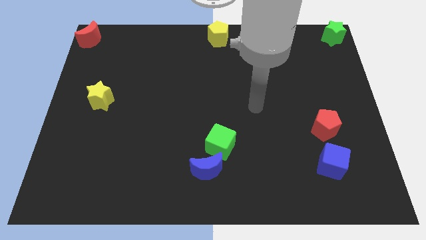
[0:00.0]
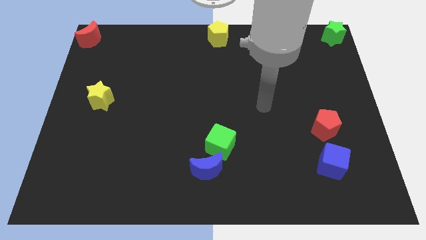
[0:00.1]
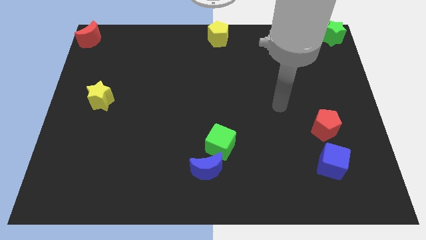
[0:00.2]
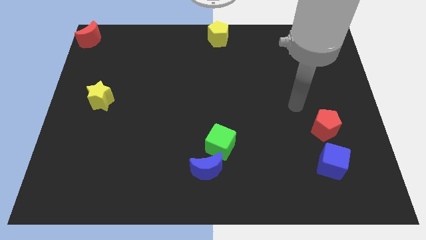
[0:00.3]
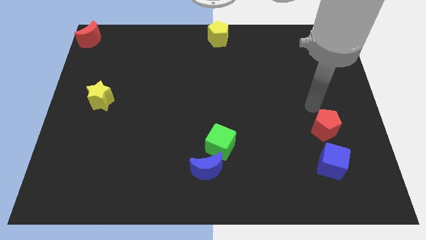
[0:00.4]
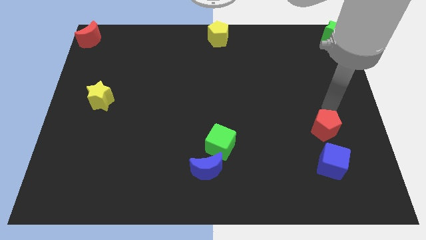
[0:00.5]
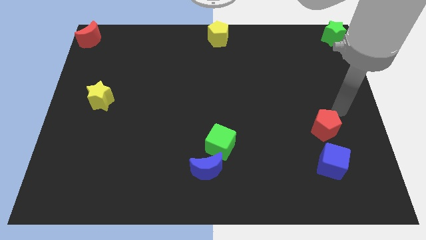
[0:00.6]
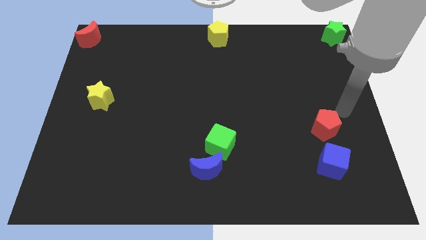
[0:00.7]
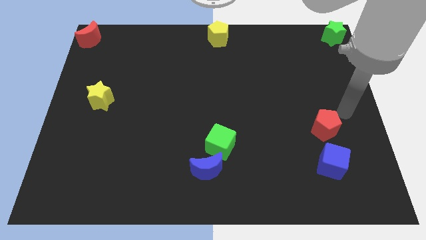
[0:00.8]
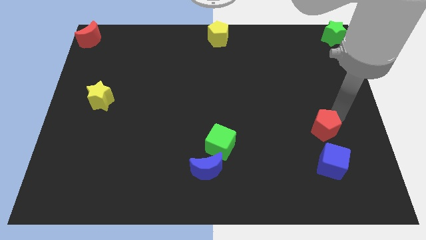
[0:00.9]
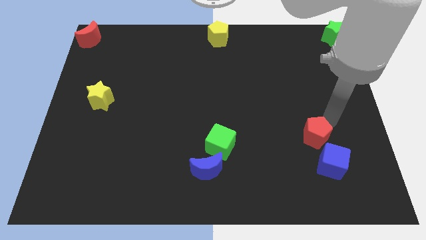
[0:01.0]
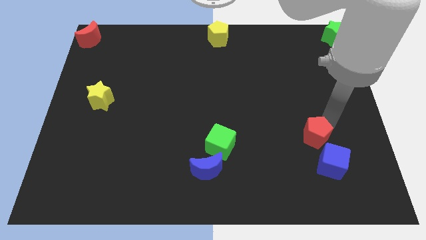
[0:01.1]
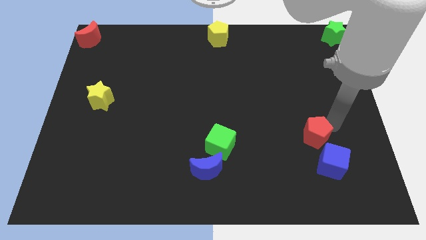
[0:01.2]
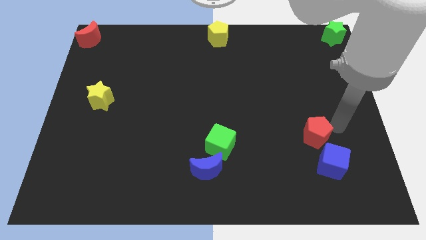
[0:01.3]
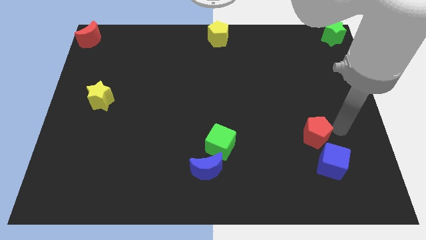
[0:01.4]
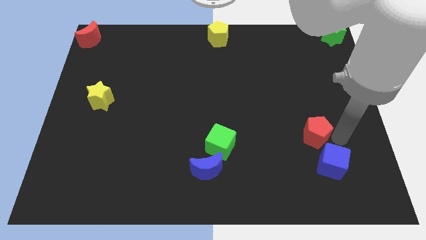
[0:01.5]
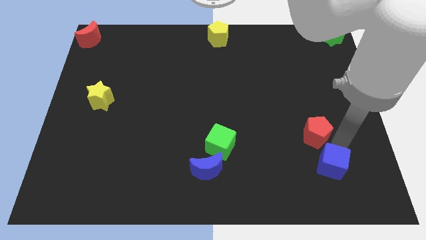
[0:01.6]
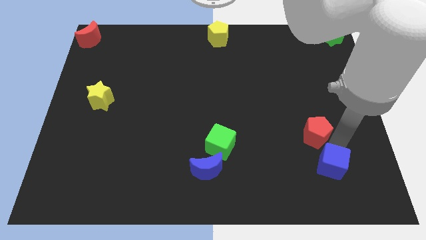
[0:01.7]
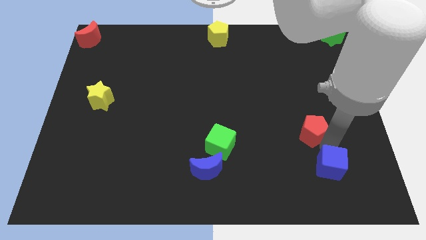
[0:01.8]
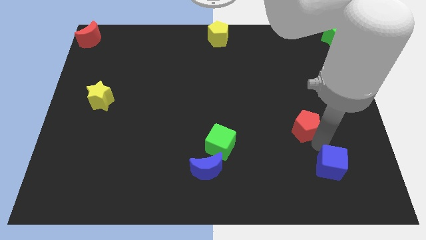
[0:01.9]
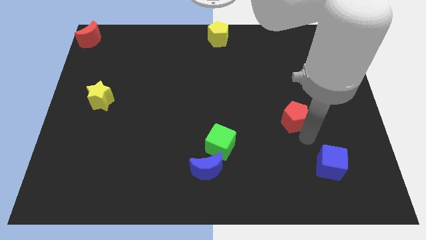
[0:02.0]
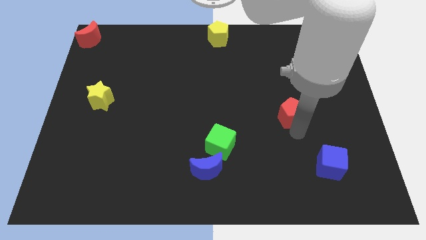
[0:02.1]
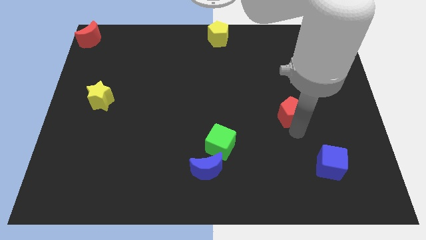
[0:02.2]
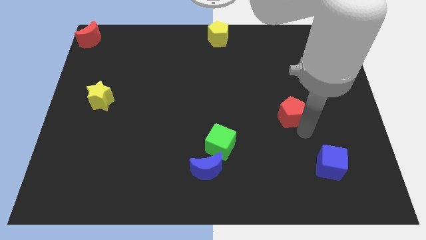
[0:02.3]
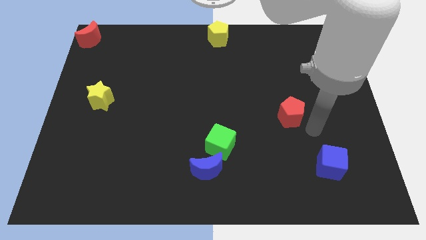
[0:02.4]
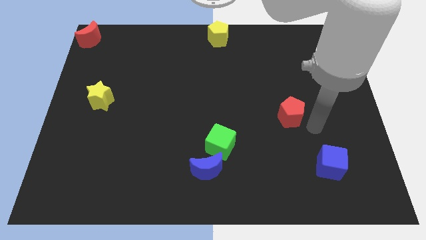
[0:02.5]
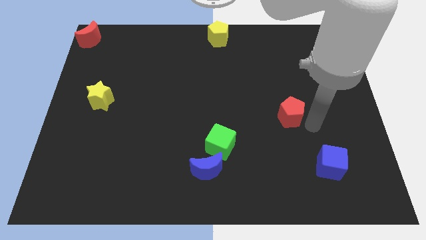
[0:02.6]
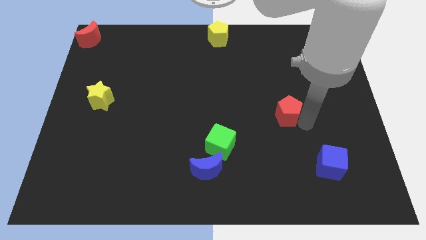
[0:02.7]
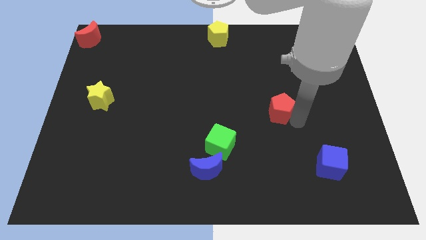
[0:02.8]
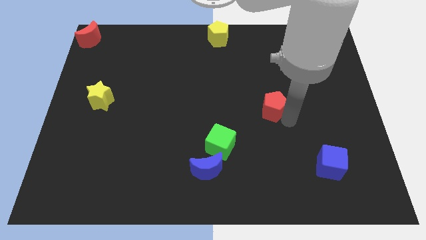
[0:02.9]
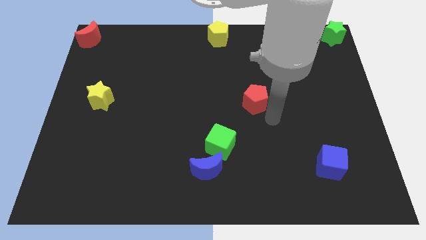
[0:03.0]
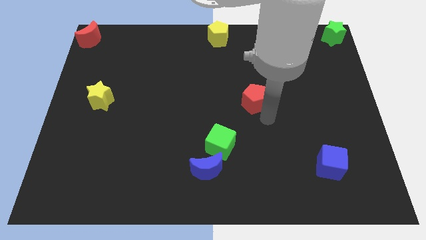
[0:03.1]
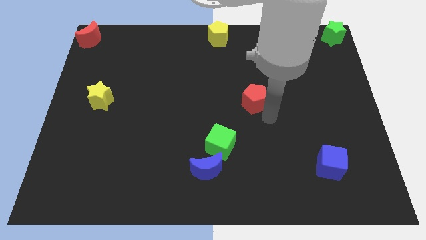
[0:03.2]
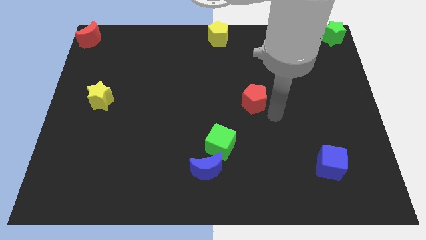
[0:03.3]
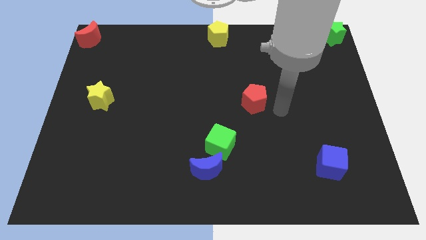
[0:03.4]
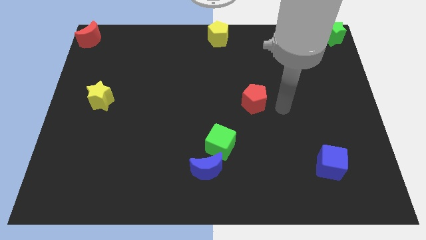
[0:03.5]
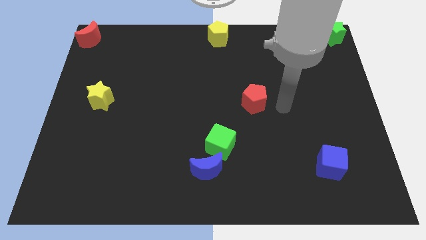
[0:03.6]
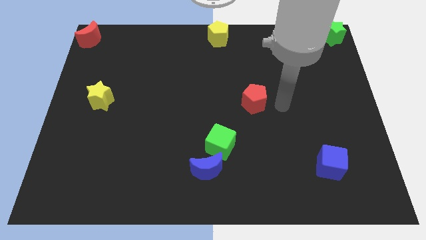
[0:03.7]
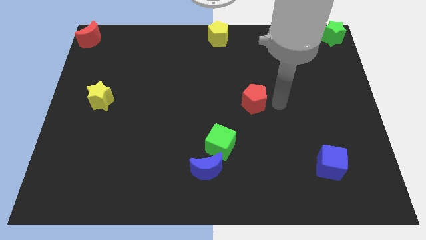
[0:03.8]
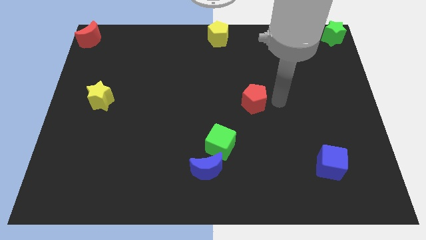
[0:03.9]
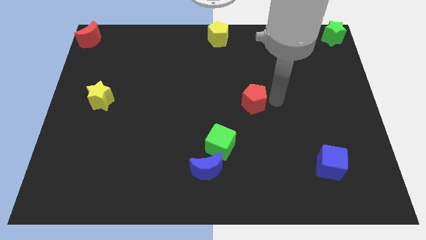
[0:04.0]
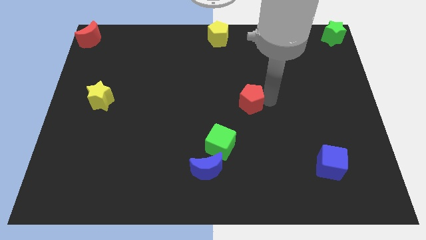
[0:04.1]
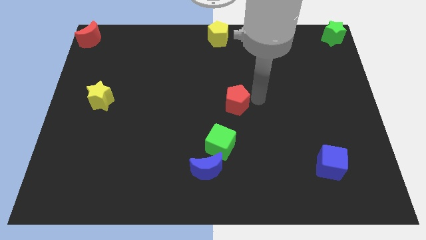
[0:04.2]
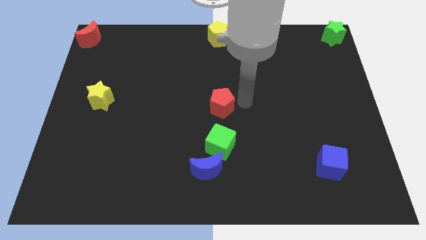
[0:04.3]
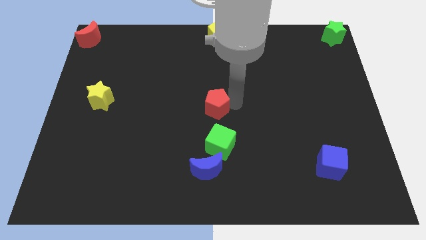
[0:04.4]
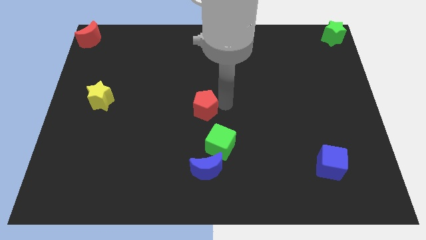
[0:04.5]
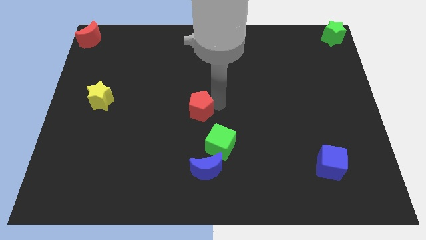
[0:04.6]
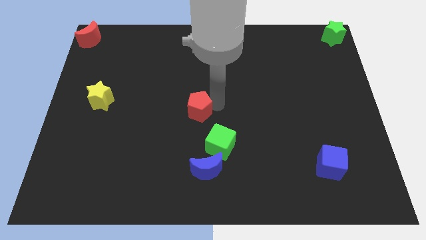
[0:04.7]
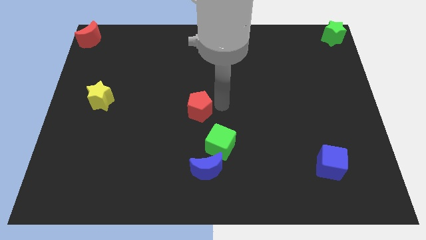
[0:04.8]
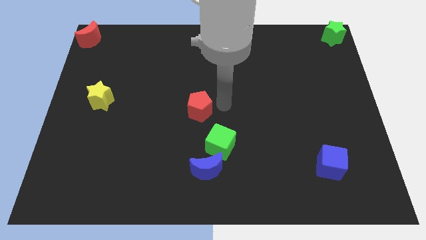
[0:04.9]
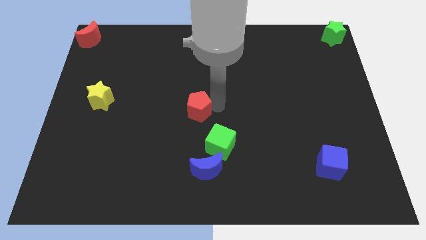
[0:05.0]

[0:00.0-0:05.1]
put the red pentagon at the center of the board

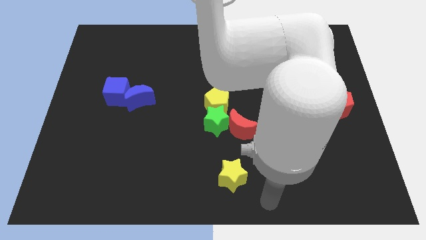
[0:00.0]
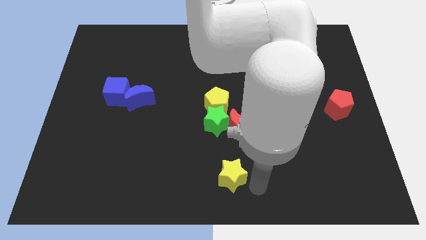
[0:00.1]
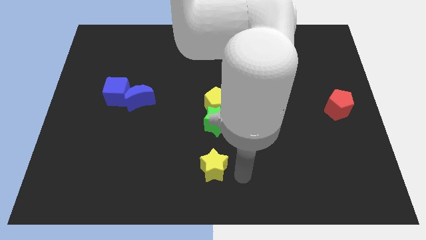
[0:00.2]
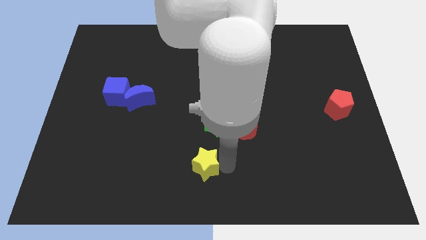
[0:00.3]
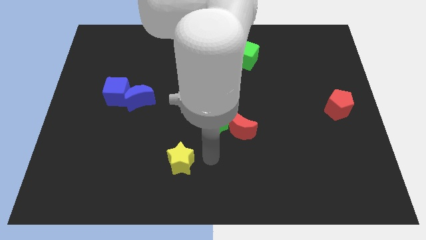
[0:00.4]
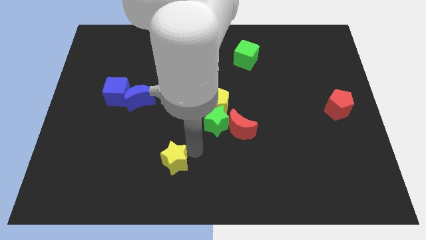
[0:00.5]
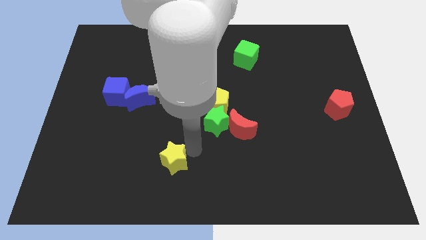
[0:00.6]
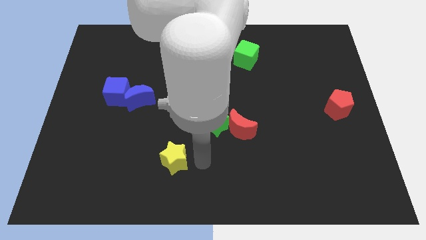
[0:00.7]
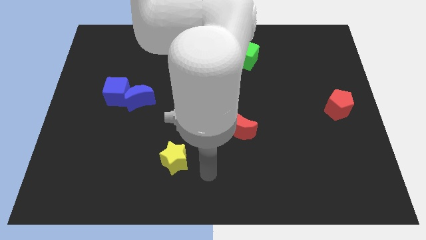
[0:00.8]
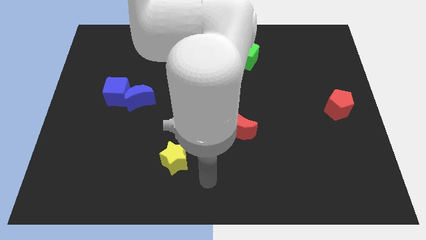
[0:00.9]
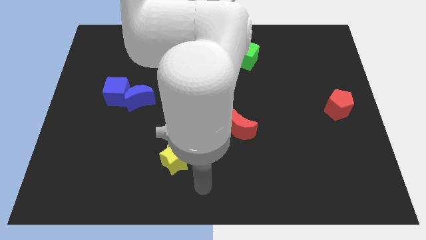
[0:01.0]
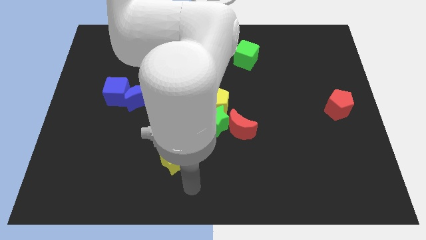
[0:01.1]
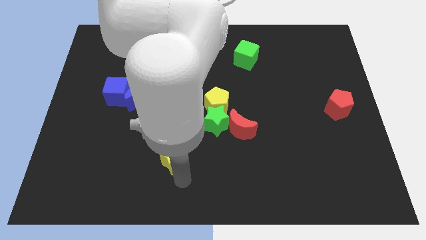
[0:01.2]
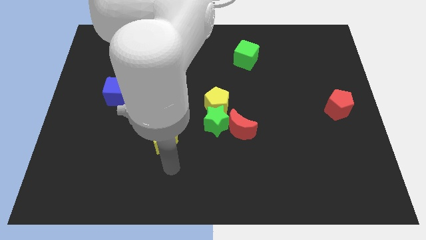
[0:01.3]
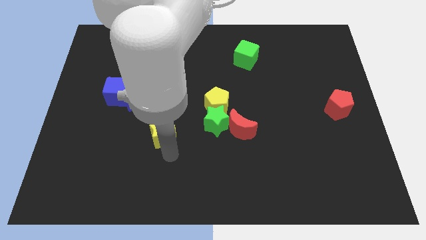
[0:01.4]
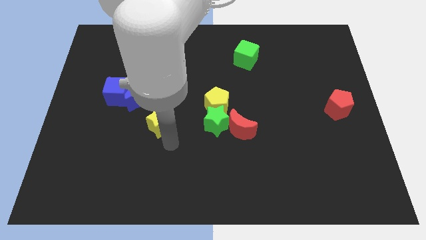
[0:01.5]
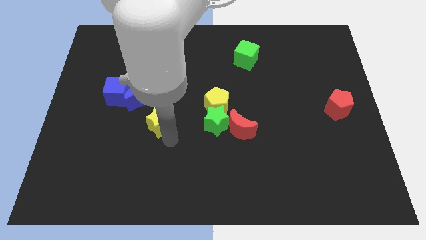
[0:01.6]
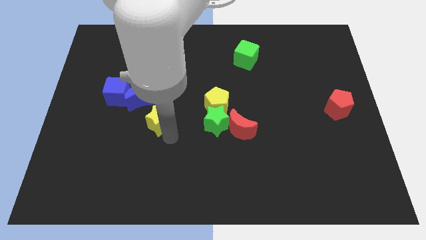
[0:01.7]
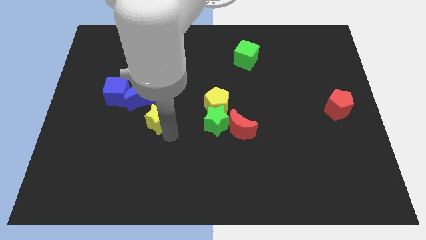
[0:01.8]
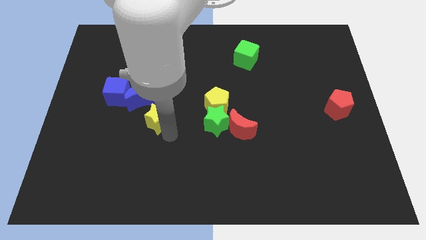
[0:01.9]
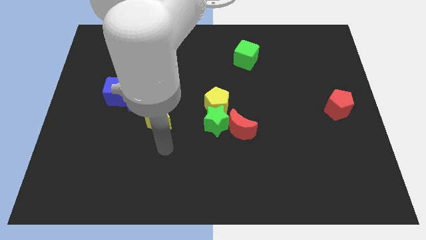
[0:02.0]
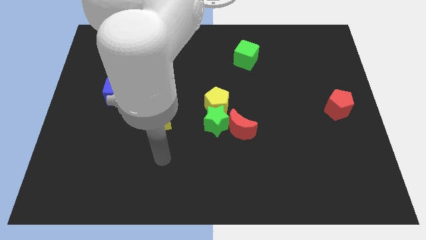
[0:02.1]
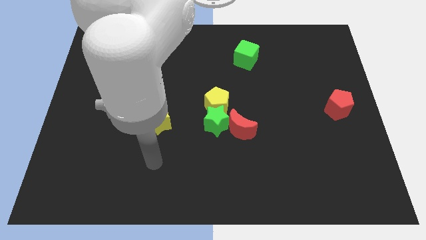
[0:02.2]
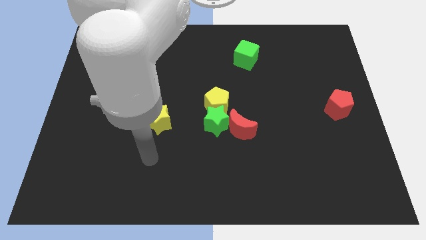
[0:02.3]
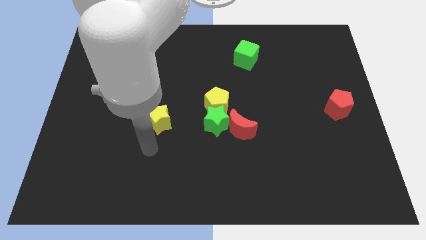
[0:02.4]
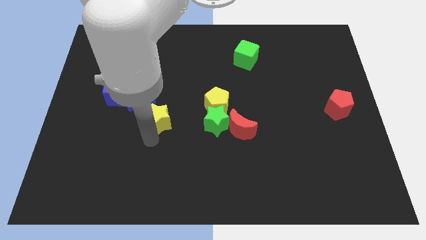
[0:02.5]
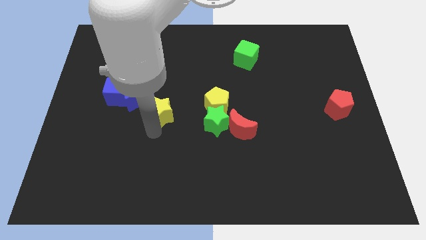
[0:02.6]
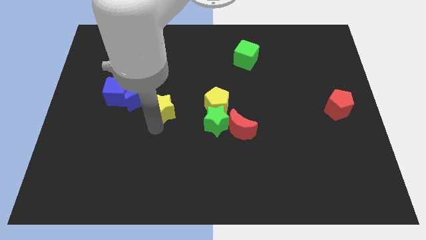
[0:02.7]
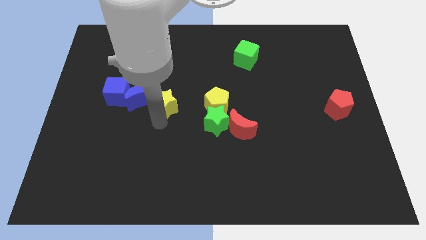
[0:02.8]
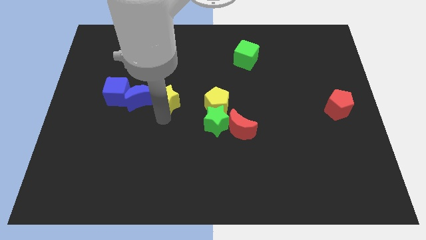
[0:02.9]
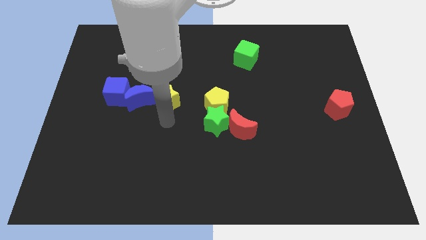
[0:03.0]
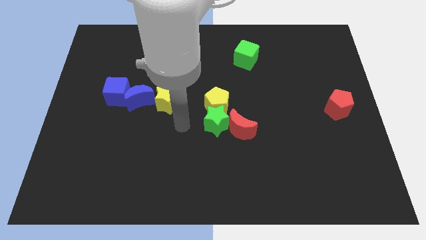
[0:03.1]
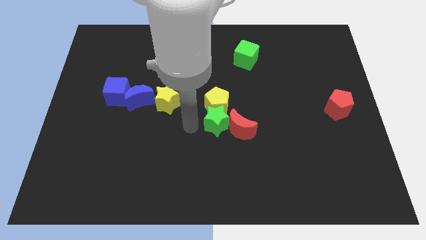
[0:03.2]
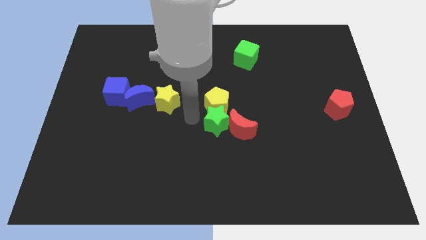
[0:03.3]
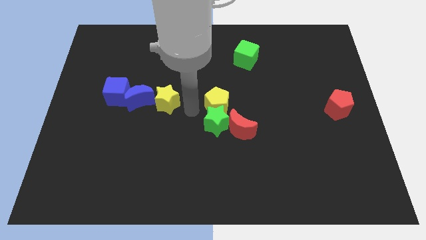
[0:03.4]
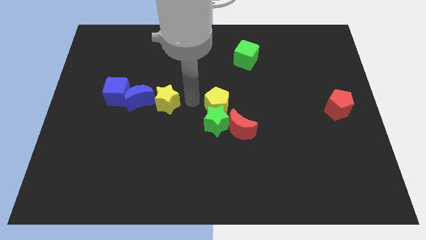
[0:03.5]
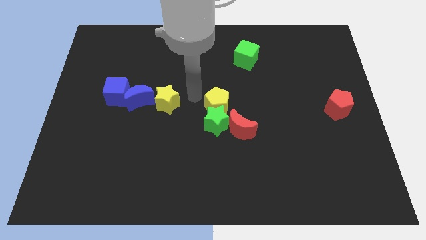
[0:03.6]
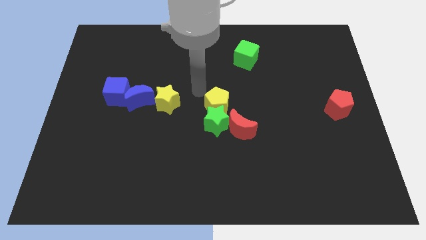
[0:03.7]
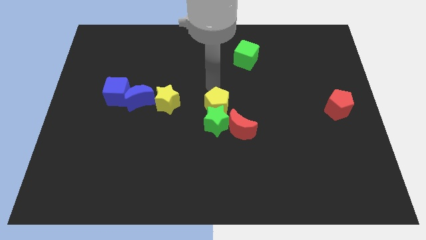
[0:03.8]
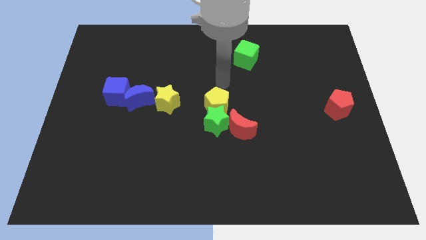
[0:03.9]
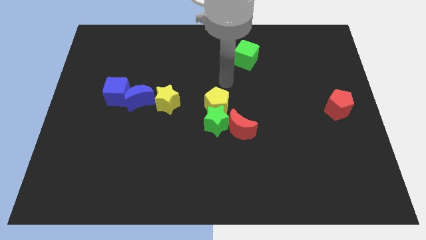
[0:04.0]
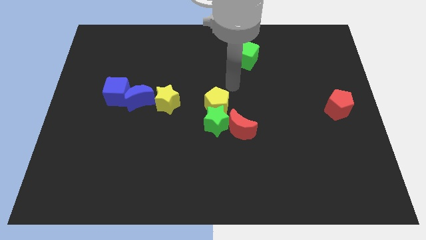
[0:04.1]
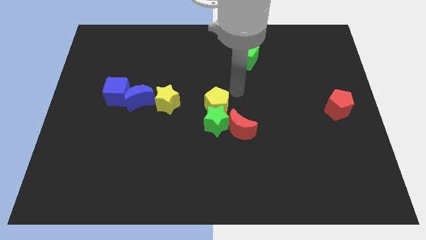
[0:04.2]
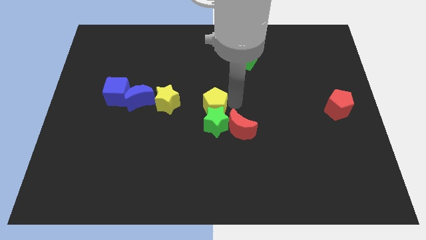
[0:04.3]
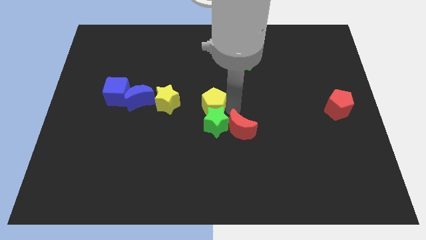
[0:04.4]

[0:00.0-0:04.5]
place the yellow star parallel to the yellow pentagon
